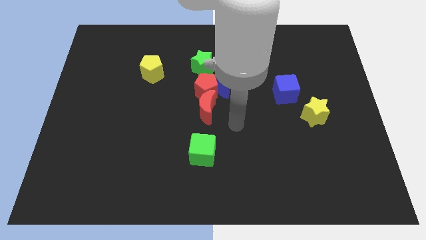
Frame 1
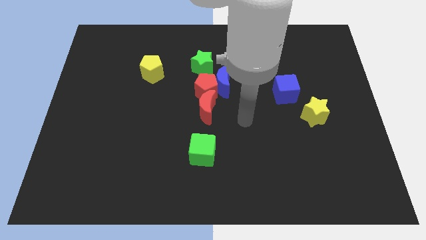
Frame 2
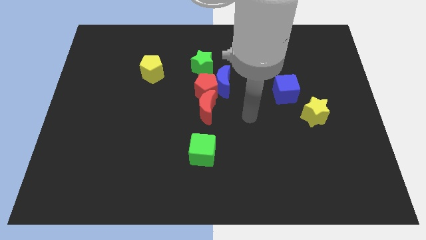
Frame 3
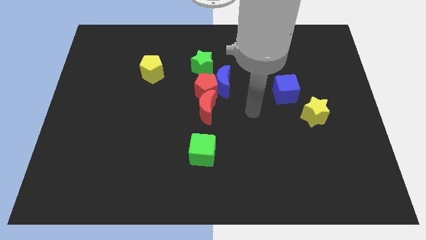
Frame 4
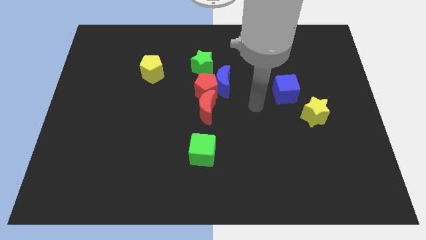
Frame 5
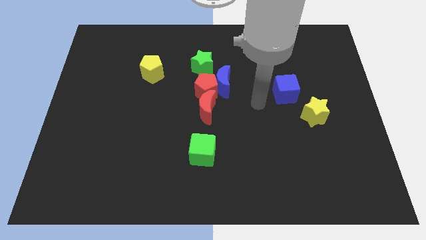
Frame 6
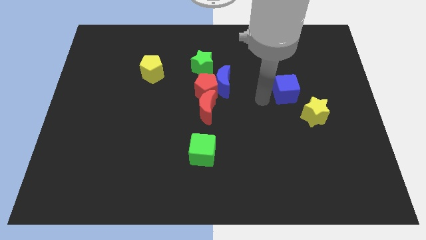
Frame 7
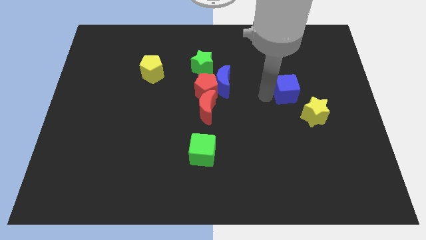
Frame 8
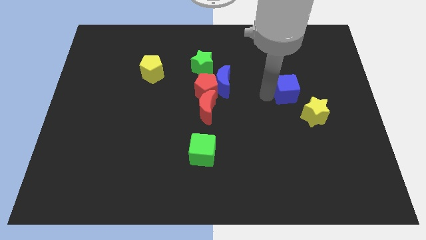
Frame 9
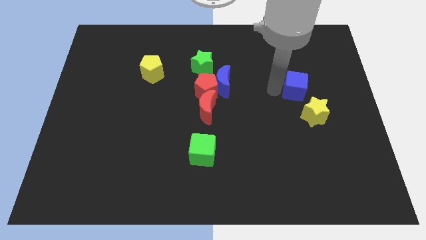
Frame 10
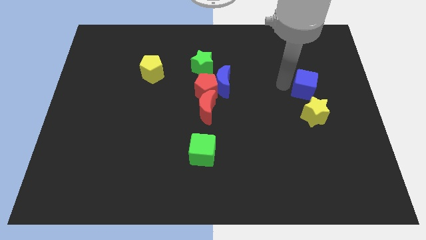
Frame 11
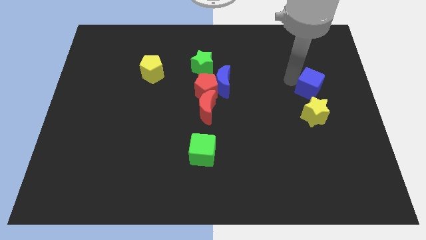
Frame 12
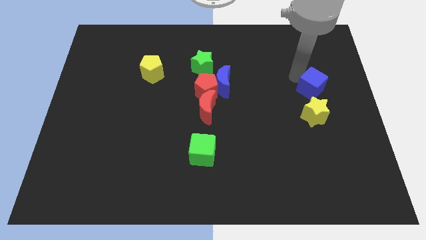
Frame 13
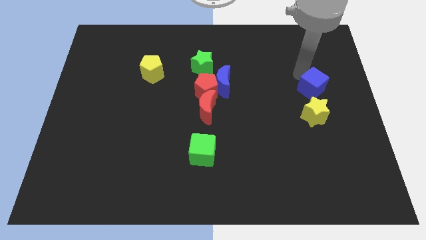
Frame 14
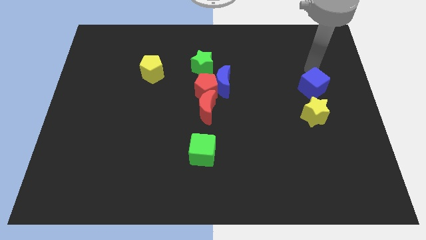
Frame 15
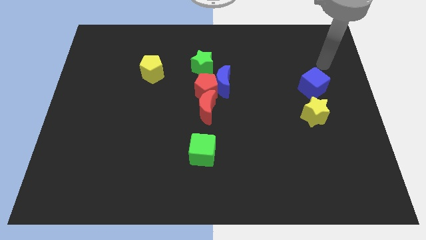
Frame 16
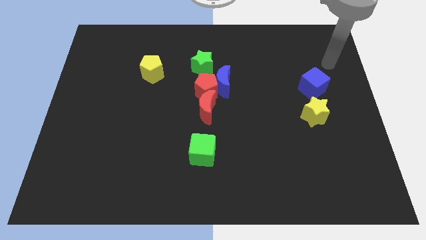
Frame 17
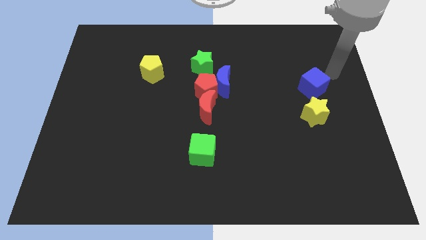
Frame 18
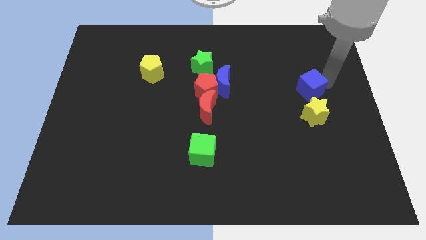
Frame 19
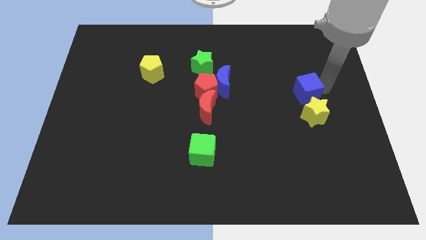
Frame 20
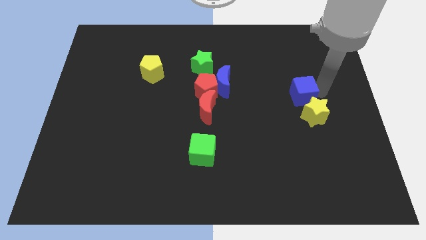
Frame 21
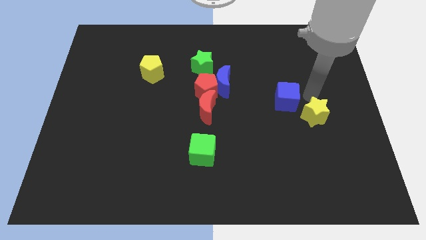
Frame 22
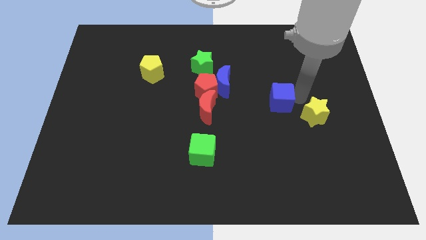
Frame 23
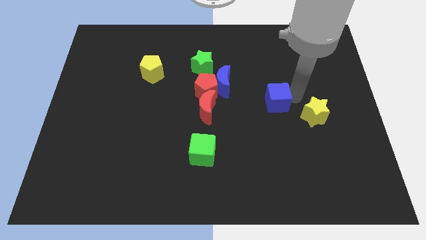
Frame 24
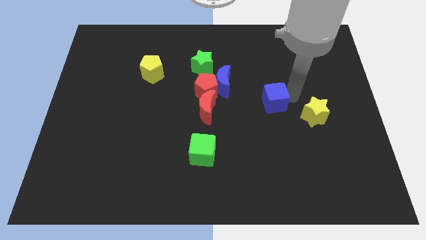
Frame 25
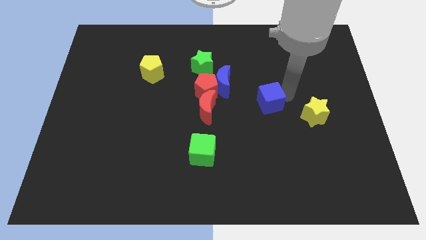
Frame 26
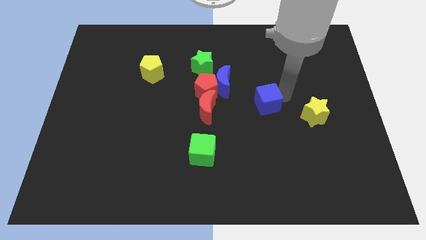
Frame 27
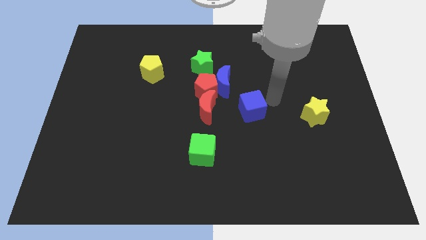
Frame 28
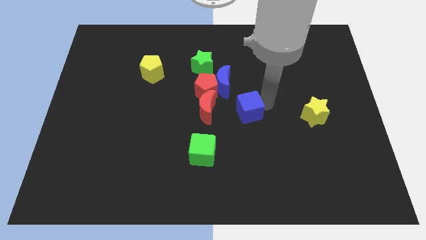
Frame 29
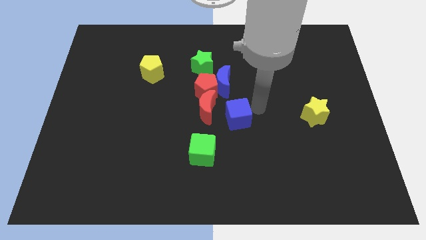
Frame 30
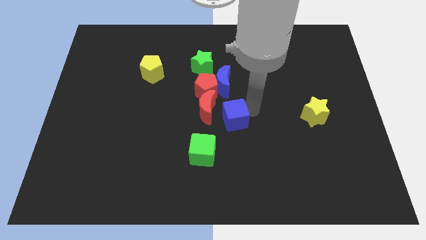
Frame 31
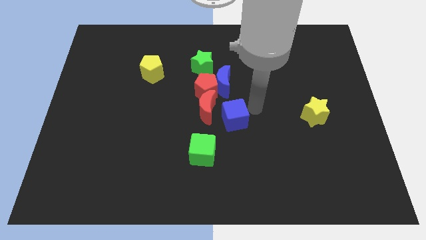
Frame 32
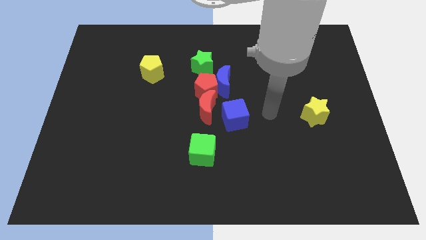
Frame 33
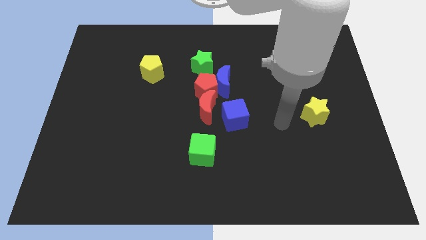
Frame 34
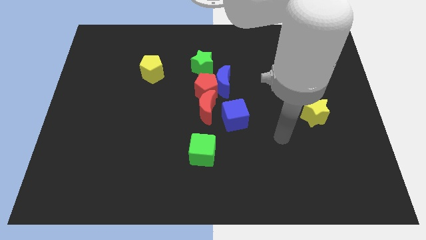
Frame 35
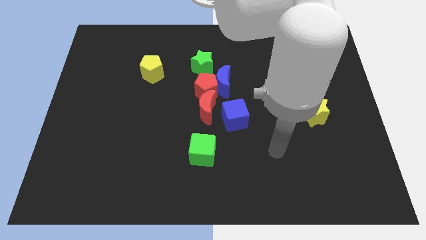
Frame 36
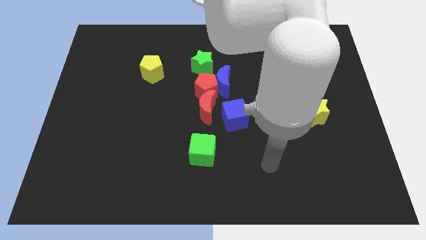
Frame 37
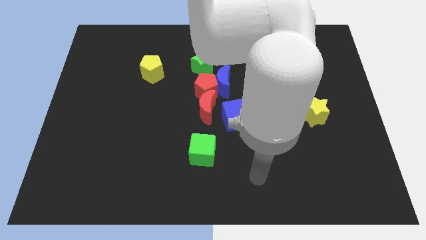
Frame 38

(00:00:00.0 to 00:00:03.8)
move the blue cube to the right side of the red crescent

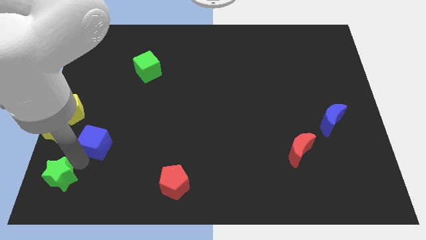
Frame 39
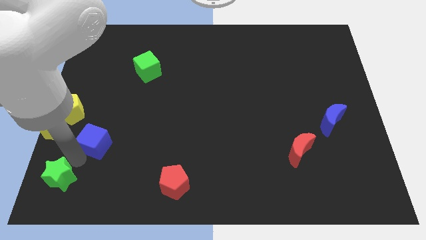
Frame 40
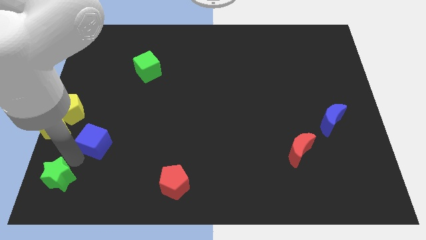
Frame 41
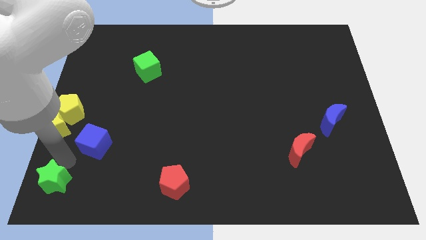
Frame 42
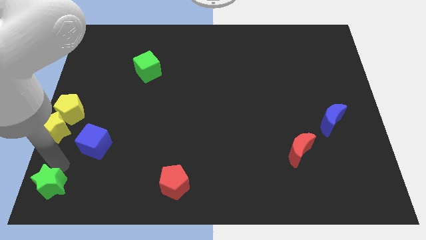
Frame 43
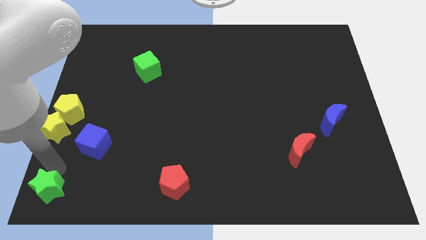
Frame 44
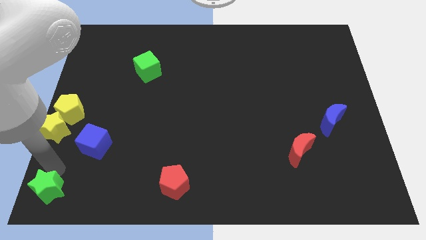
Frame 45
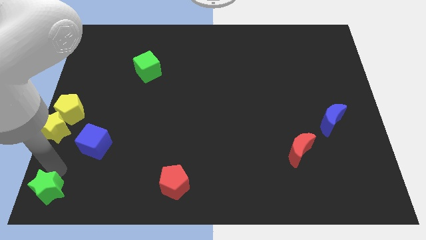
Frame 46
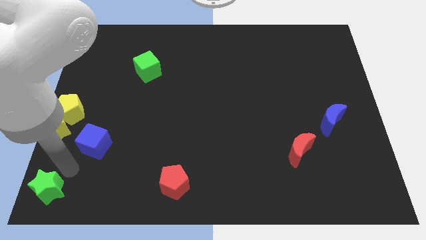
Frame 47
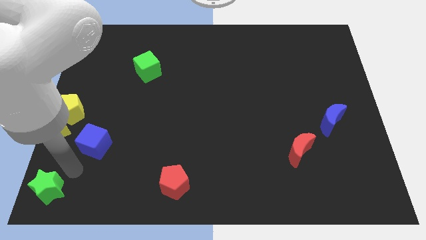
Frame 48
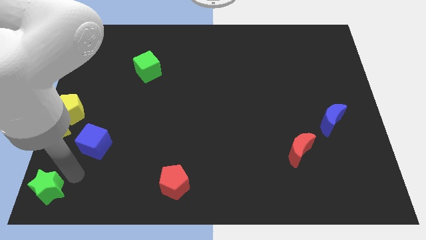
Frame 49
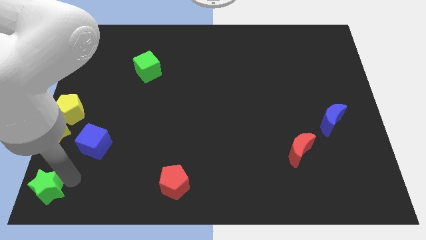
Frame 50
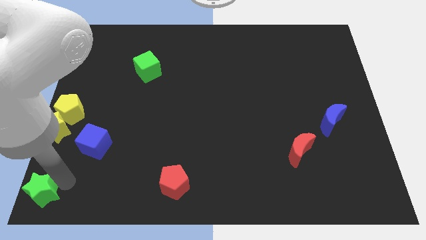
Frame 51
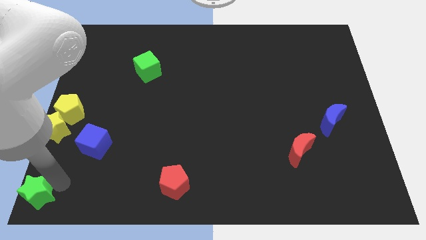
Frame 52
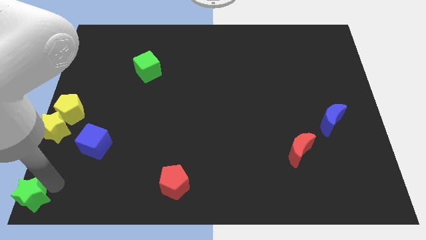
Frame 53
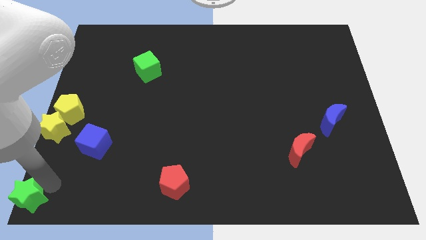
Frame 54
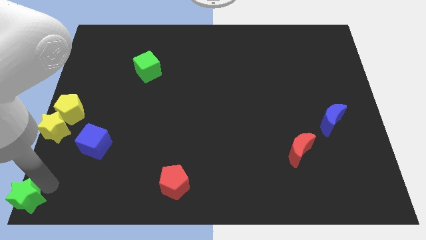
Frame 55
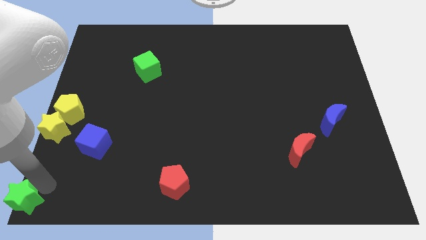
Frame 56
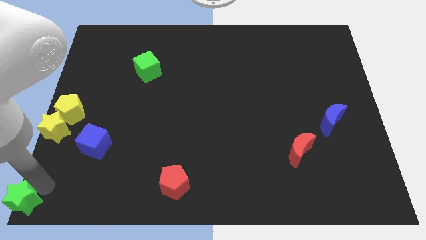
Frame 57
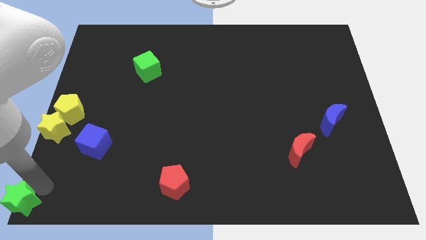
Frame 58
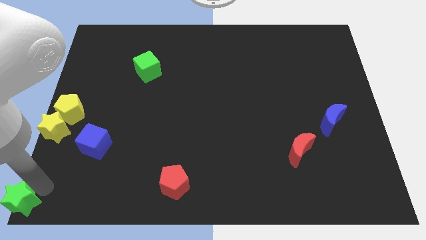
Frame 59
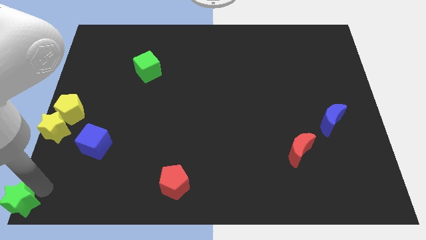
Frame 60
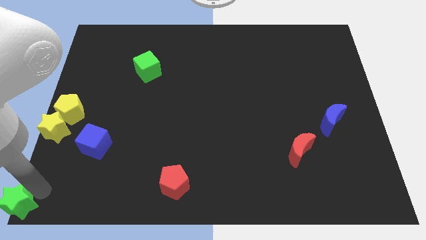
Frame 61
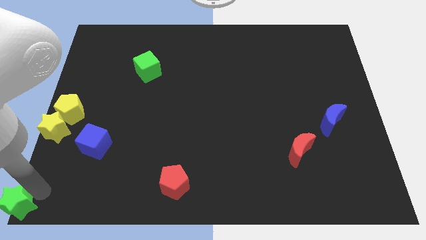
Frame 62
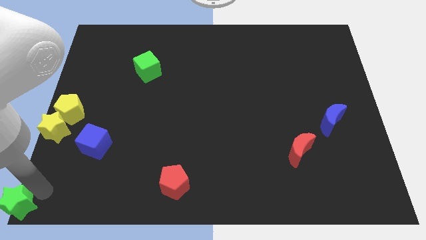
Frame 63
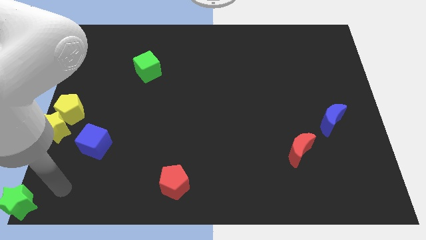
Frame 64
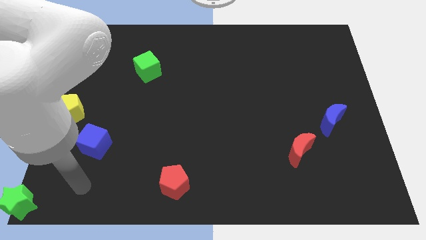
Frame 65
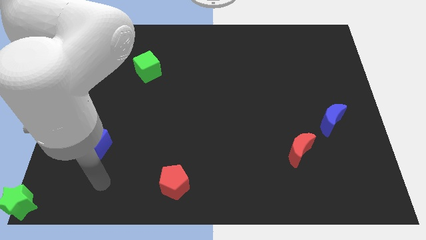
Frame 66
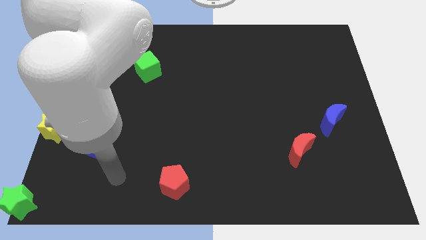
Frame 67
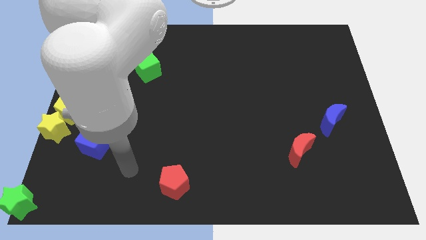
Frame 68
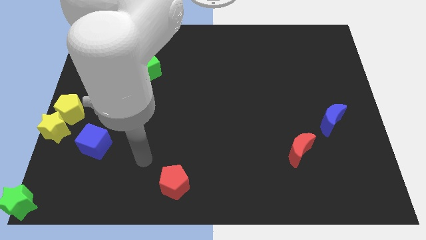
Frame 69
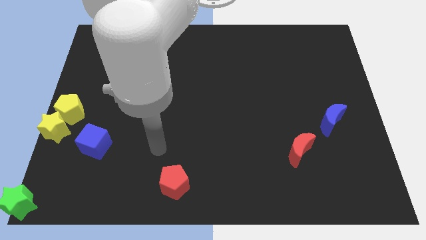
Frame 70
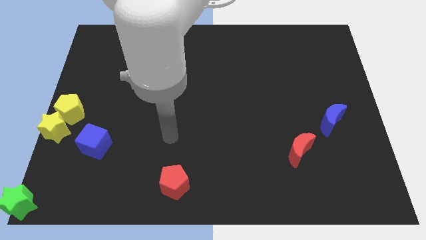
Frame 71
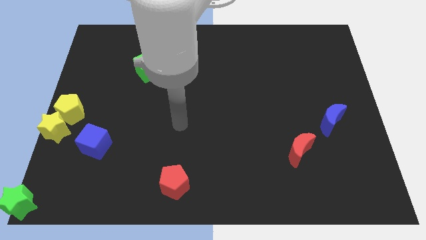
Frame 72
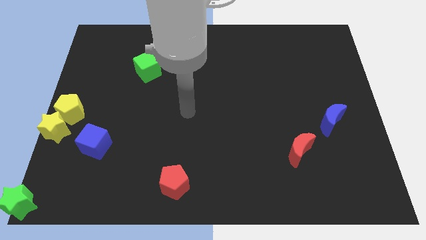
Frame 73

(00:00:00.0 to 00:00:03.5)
push the green star to the bottom left corner of the board

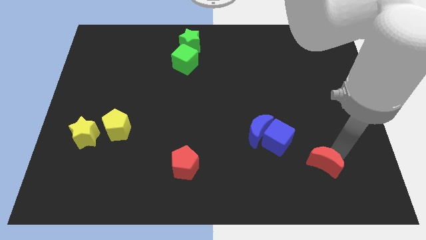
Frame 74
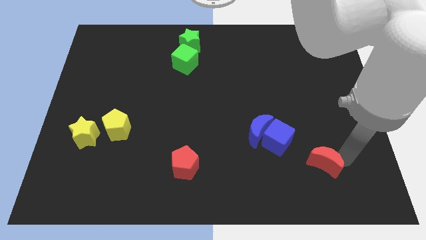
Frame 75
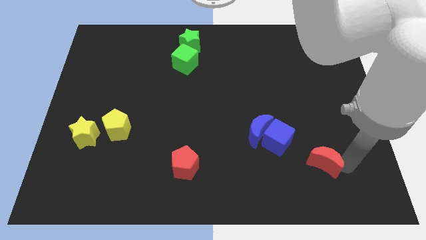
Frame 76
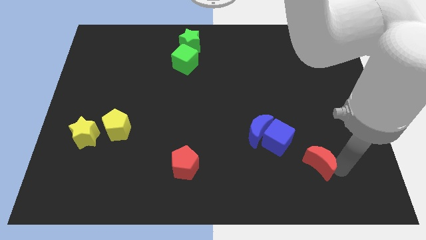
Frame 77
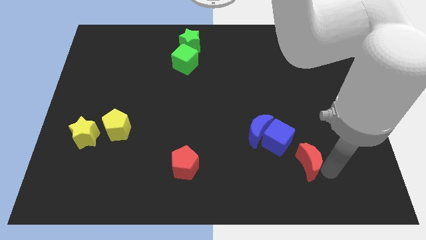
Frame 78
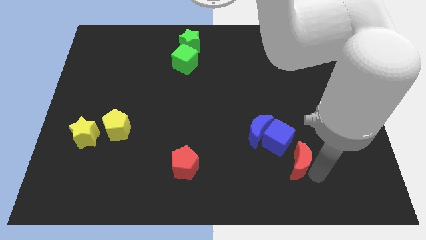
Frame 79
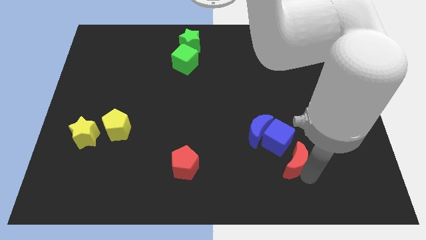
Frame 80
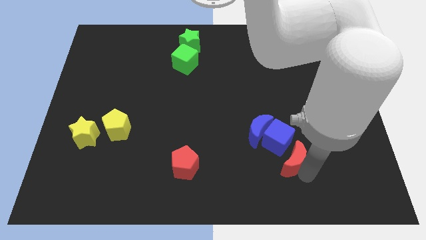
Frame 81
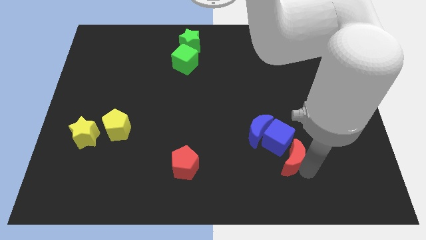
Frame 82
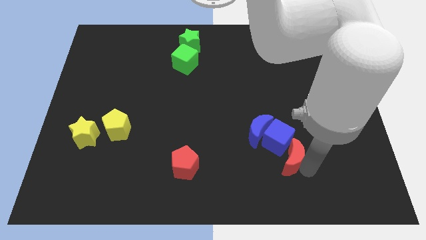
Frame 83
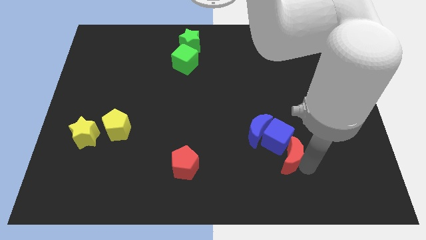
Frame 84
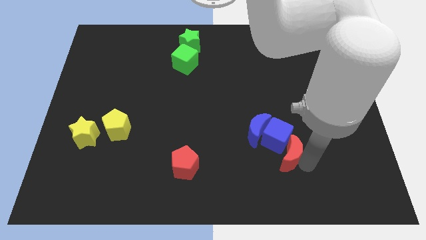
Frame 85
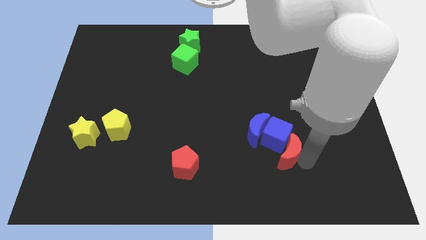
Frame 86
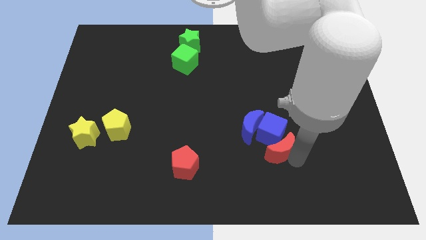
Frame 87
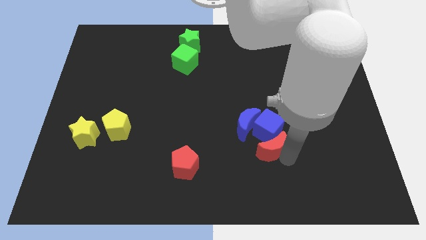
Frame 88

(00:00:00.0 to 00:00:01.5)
move the red crescent to the bottom of the blue cube

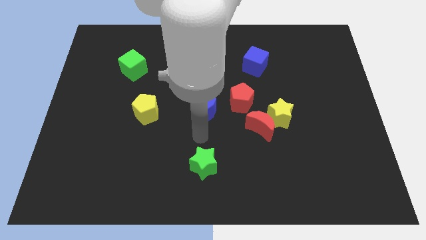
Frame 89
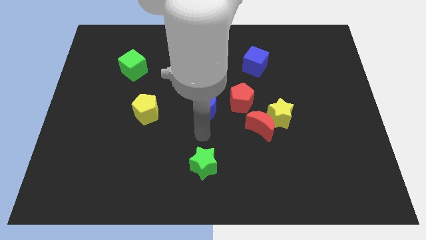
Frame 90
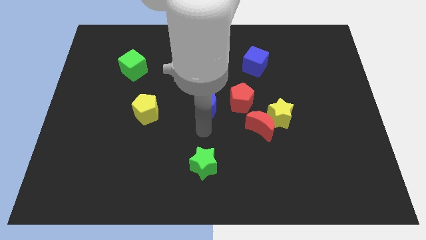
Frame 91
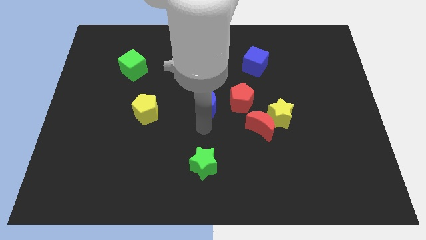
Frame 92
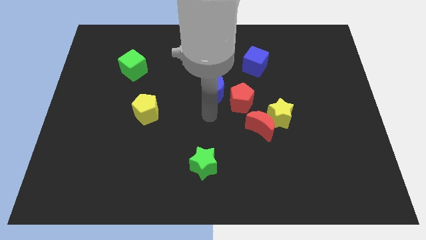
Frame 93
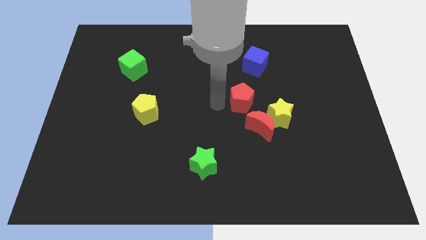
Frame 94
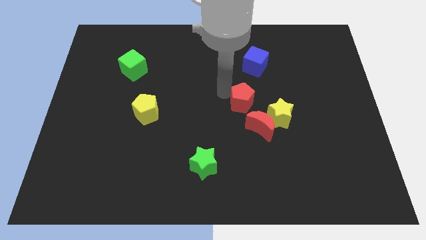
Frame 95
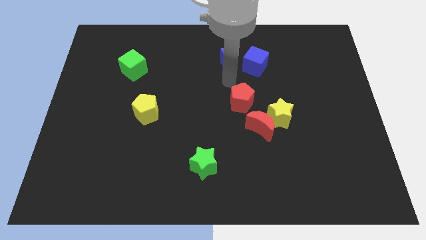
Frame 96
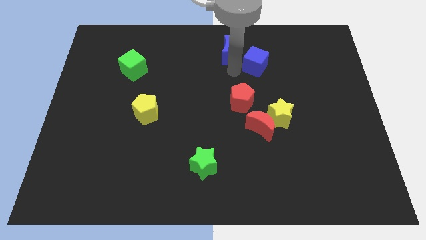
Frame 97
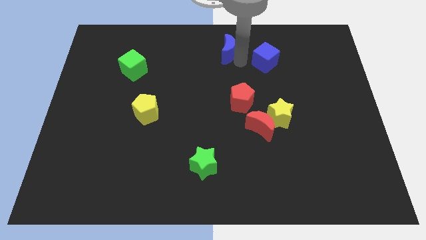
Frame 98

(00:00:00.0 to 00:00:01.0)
push the blue moon close to the blue cube
